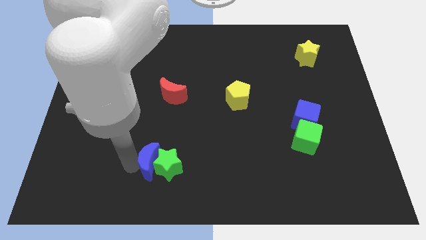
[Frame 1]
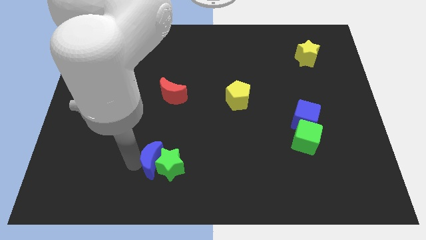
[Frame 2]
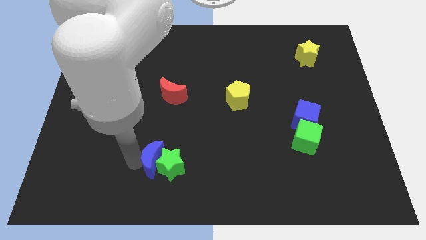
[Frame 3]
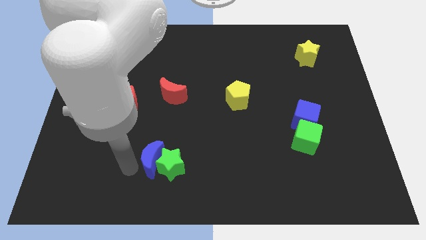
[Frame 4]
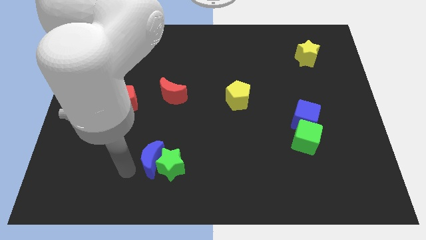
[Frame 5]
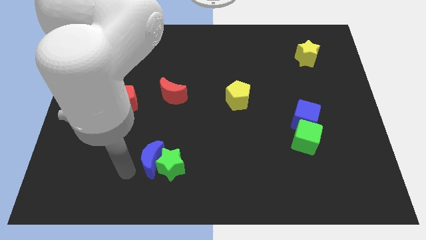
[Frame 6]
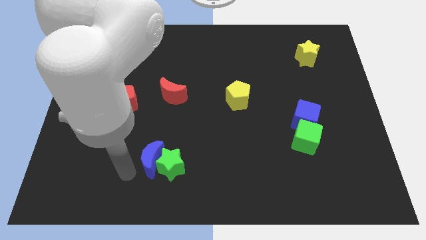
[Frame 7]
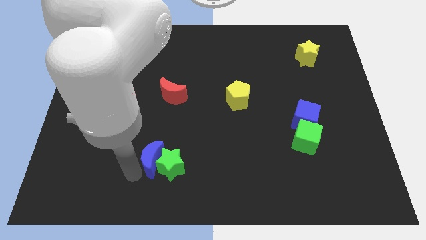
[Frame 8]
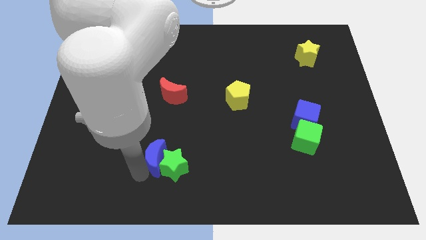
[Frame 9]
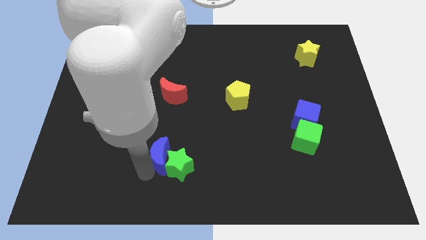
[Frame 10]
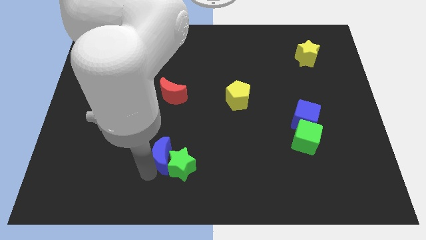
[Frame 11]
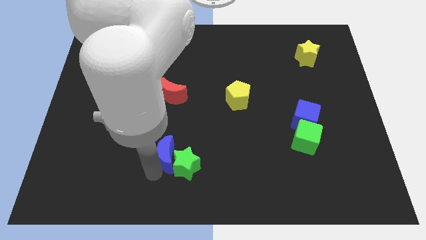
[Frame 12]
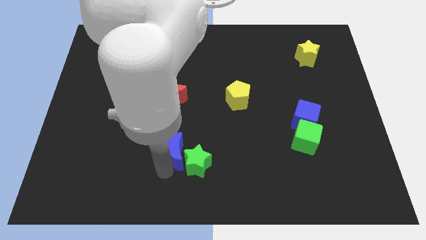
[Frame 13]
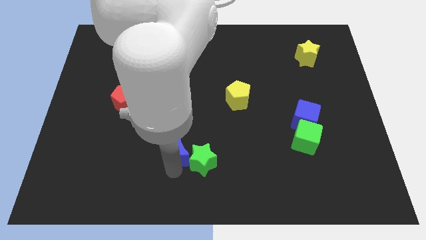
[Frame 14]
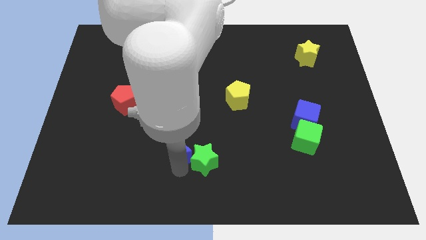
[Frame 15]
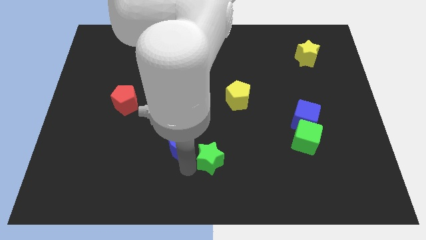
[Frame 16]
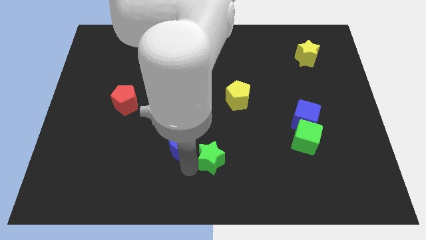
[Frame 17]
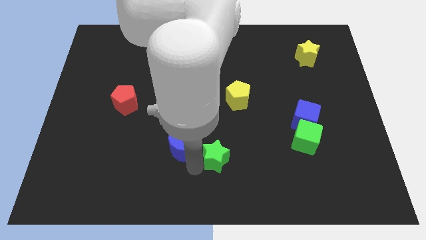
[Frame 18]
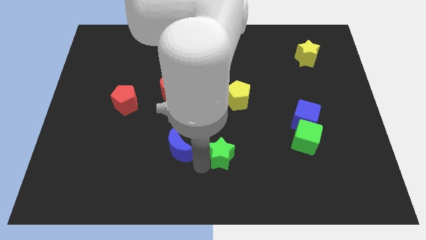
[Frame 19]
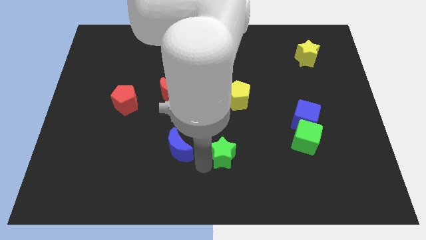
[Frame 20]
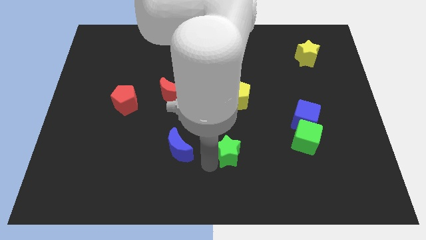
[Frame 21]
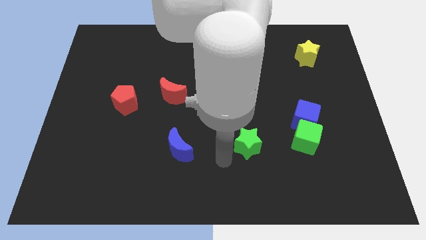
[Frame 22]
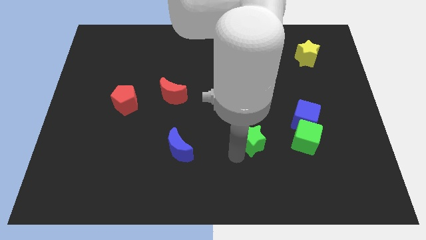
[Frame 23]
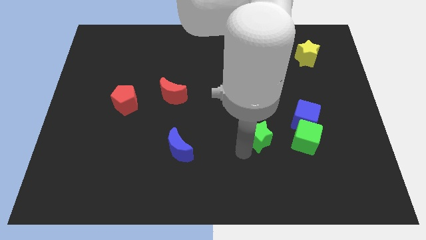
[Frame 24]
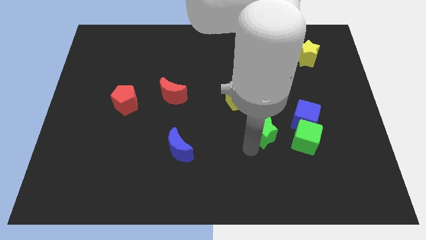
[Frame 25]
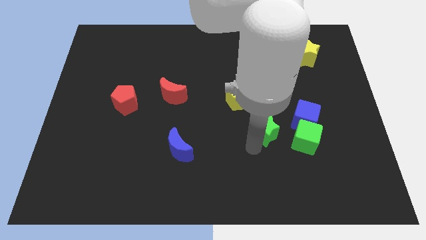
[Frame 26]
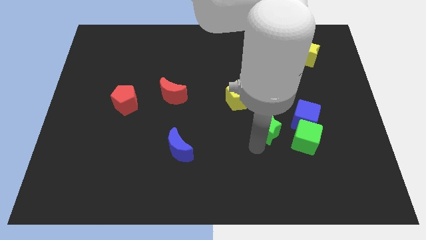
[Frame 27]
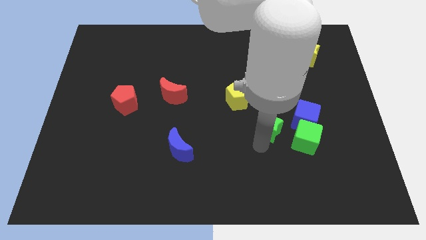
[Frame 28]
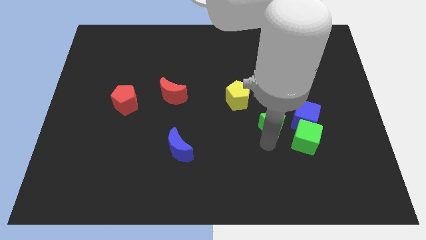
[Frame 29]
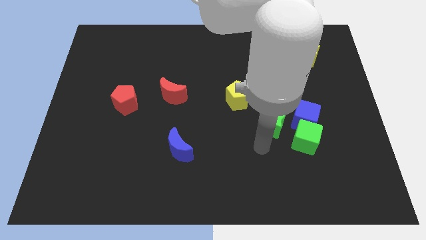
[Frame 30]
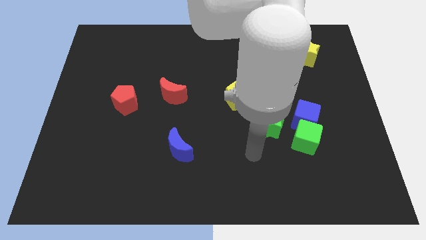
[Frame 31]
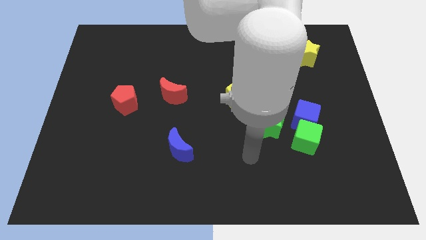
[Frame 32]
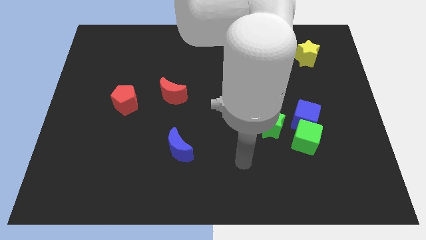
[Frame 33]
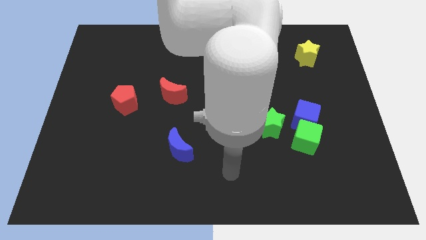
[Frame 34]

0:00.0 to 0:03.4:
separate the green star from the blue crescent

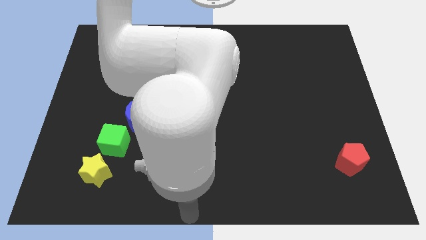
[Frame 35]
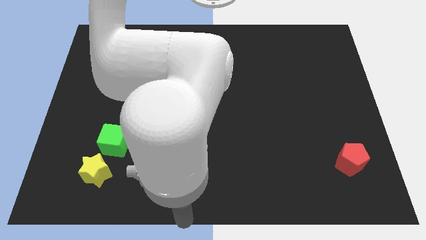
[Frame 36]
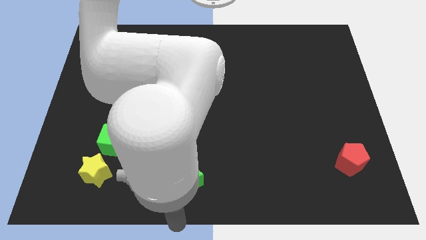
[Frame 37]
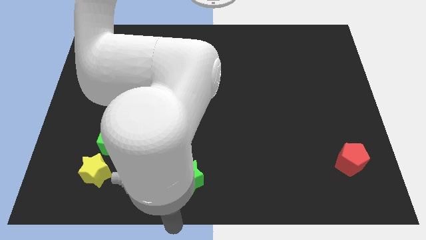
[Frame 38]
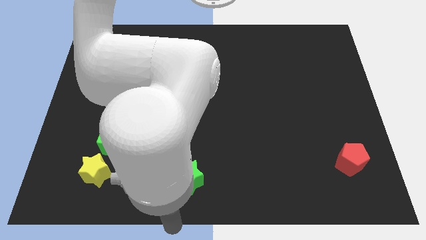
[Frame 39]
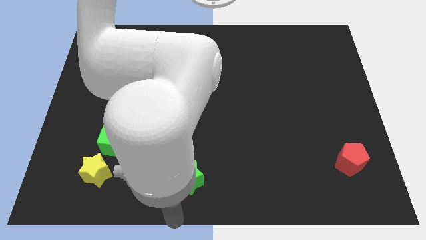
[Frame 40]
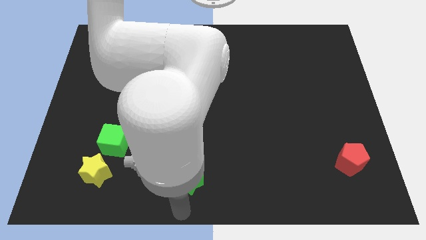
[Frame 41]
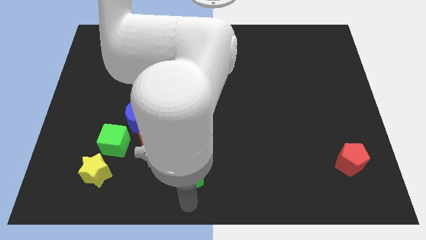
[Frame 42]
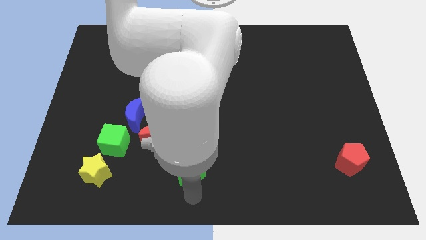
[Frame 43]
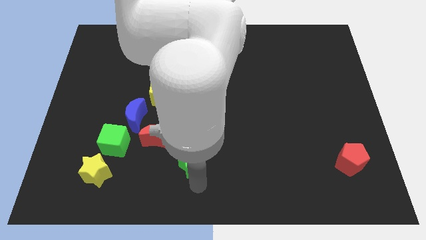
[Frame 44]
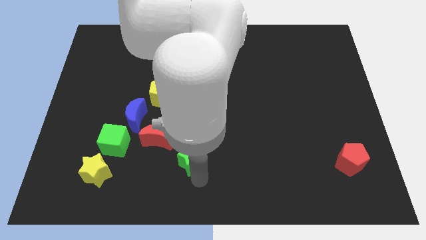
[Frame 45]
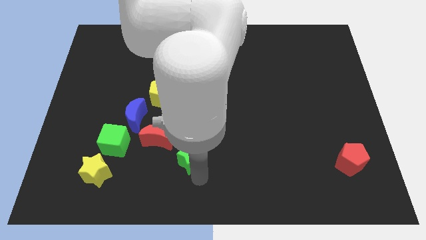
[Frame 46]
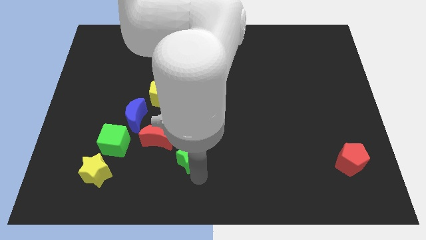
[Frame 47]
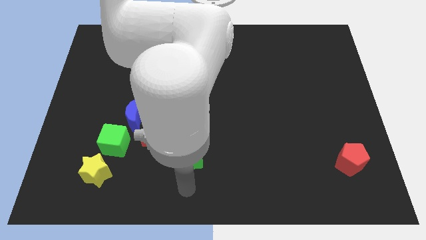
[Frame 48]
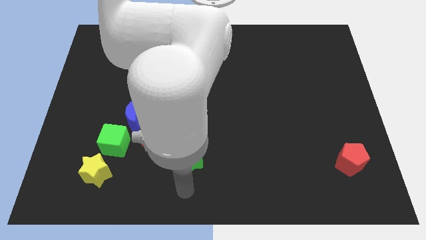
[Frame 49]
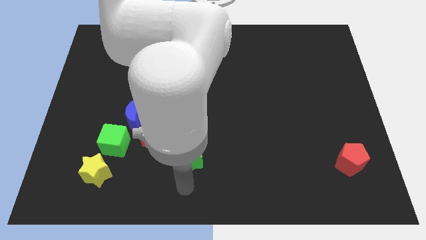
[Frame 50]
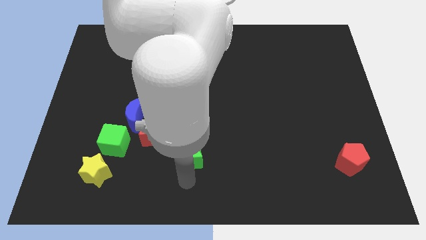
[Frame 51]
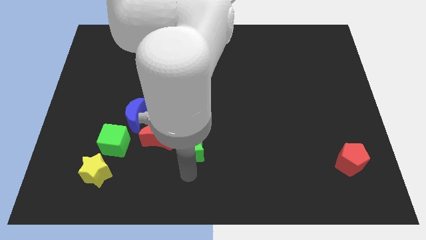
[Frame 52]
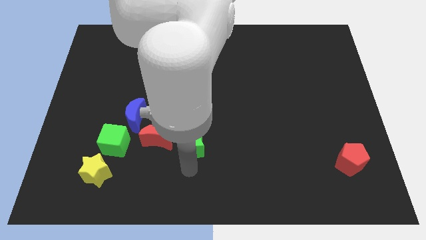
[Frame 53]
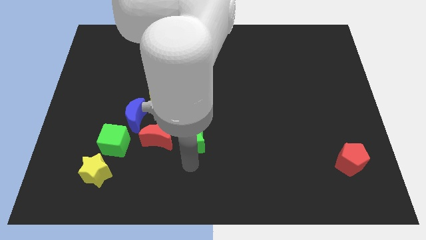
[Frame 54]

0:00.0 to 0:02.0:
place the green star to the right of the red crescent

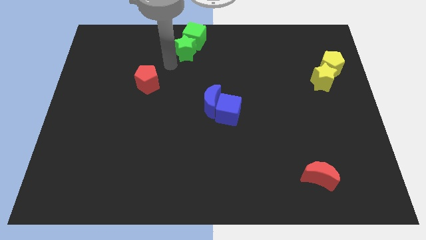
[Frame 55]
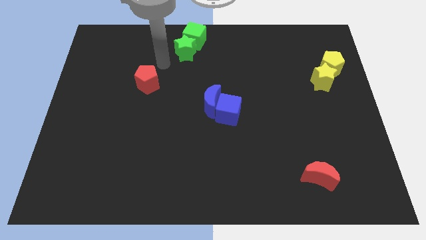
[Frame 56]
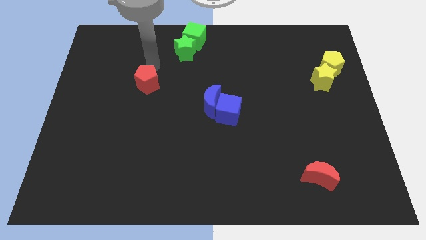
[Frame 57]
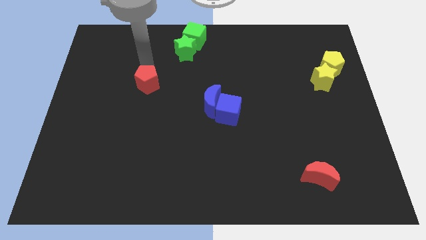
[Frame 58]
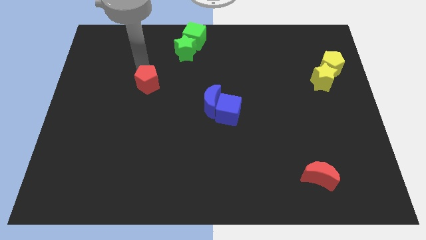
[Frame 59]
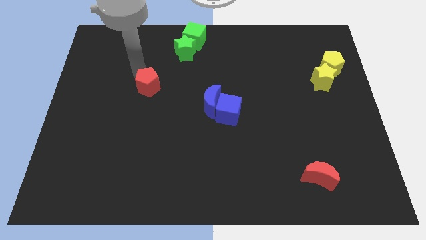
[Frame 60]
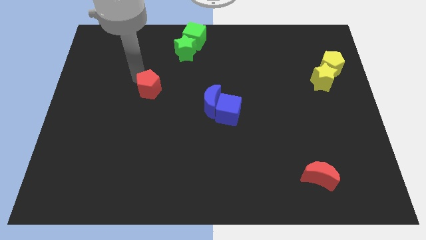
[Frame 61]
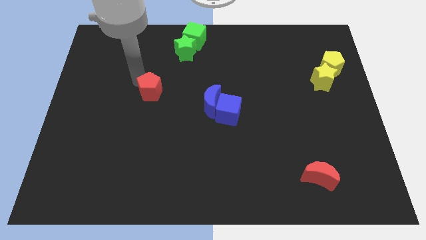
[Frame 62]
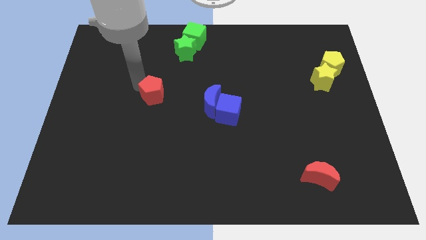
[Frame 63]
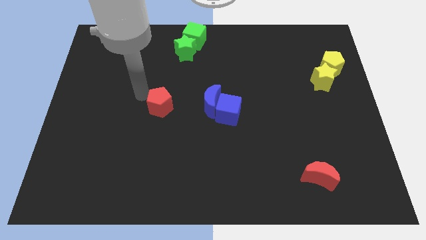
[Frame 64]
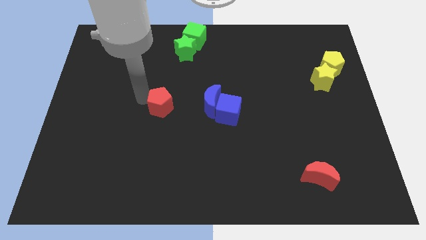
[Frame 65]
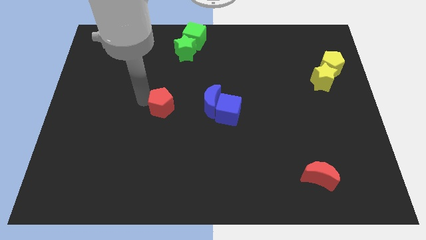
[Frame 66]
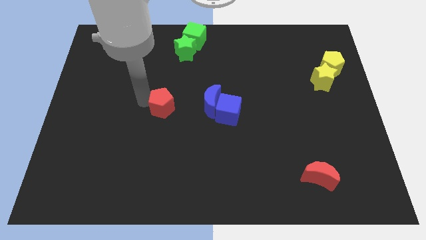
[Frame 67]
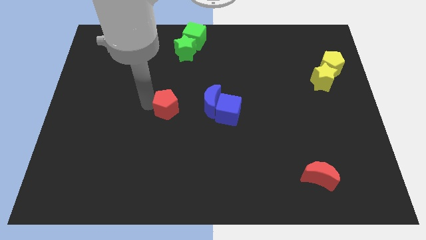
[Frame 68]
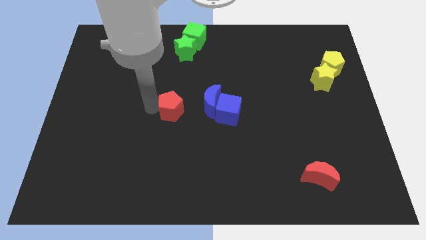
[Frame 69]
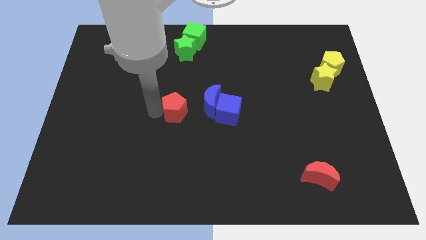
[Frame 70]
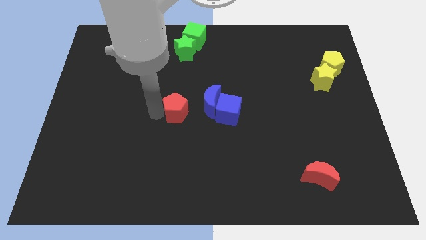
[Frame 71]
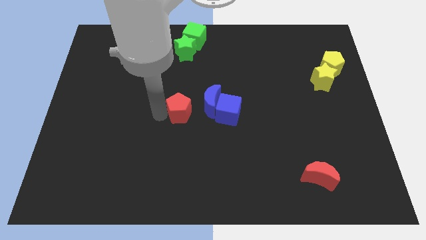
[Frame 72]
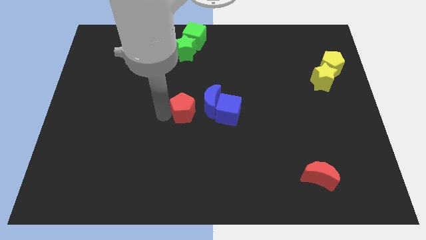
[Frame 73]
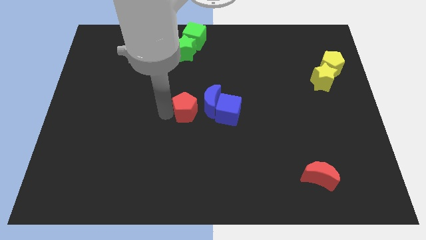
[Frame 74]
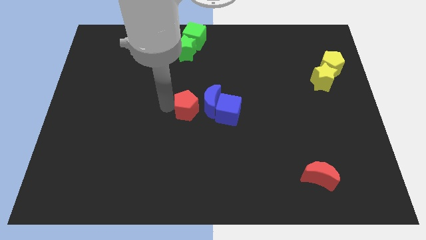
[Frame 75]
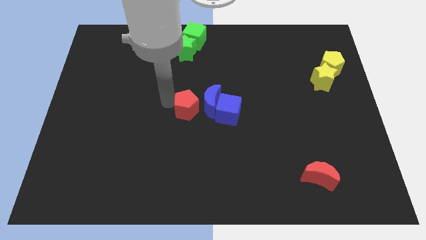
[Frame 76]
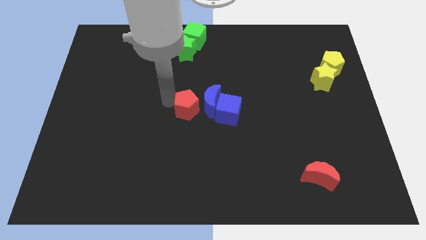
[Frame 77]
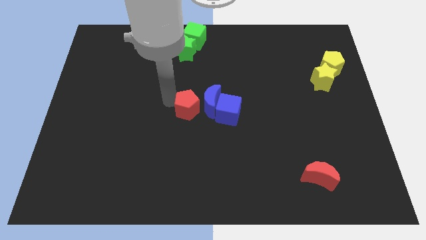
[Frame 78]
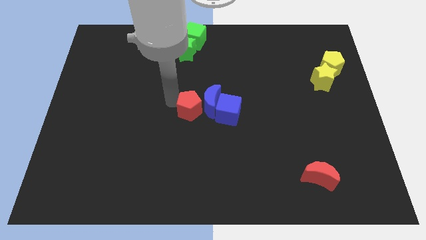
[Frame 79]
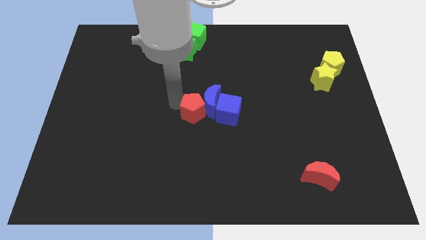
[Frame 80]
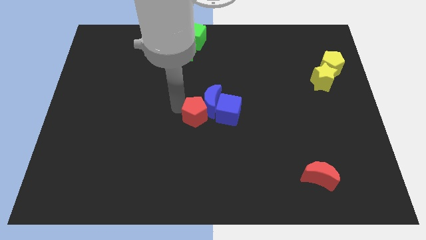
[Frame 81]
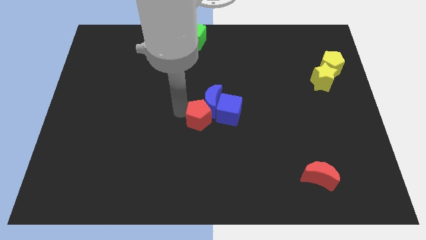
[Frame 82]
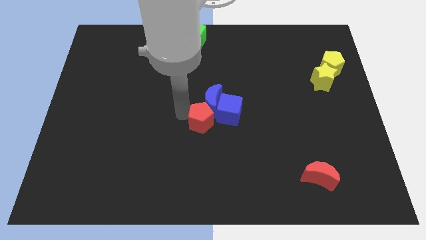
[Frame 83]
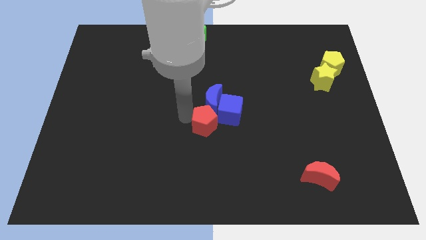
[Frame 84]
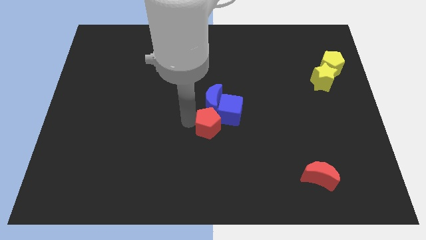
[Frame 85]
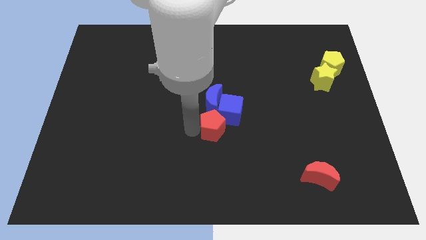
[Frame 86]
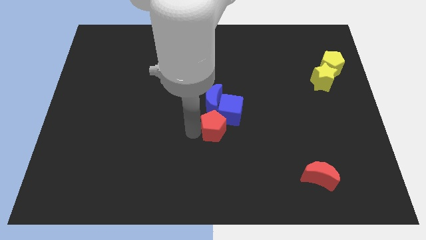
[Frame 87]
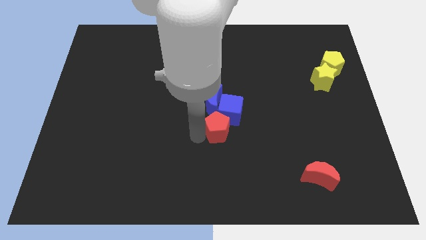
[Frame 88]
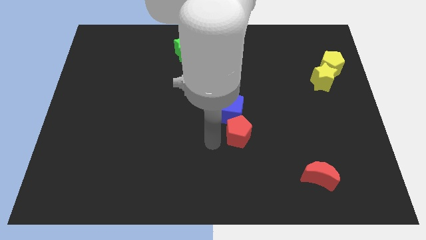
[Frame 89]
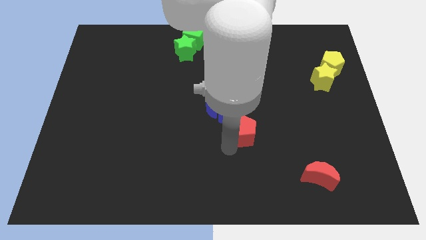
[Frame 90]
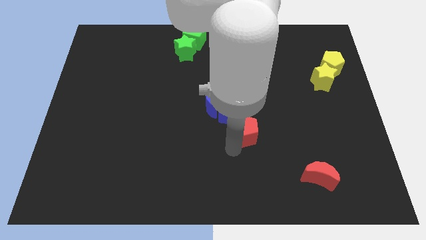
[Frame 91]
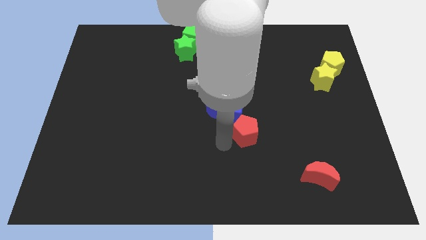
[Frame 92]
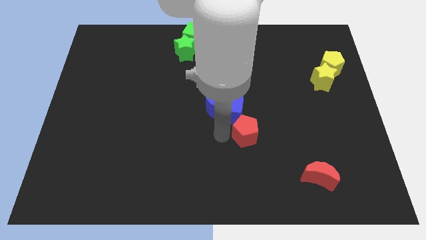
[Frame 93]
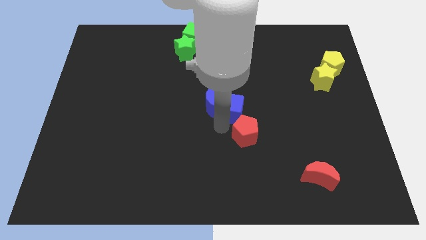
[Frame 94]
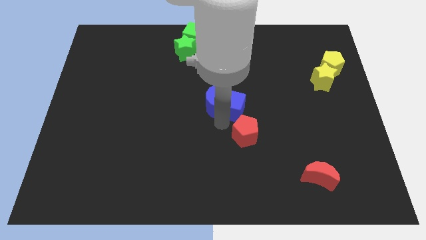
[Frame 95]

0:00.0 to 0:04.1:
place red pentagon to bottom right of blue cube
